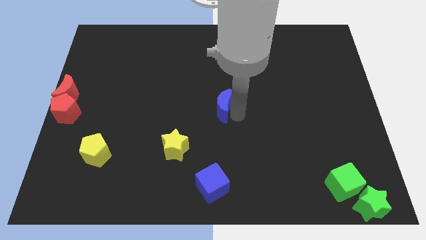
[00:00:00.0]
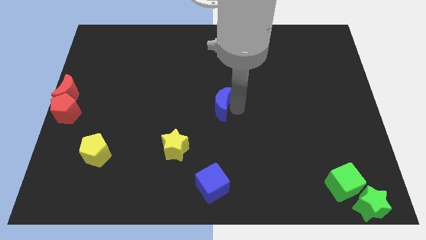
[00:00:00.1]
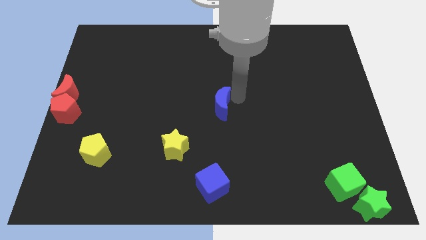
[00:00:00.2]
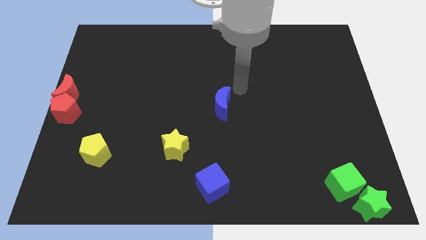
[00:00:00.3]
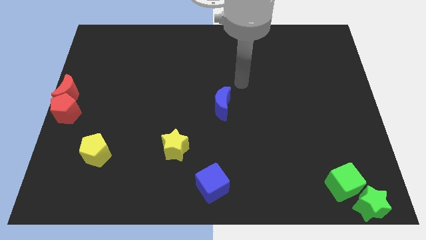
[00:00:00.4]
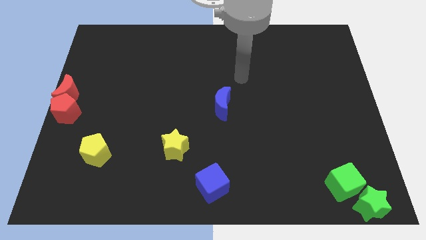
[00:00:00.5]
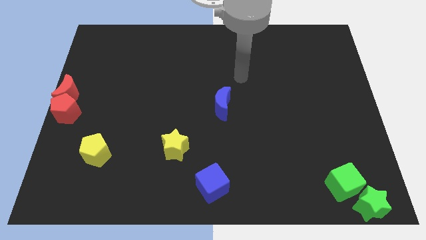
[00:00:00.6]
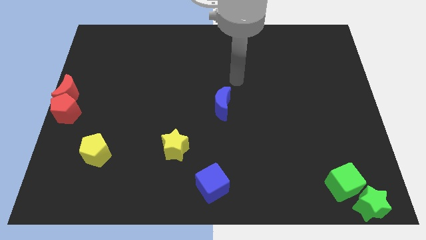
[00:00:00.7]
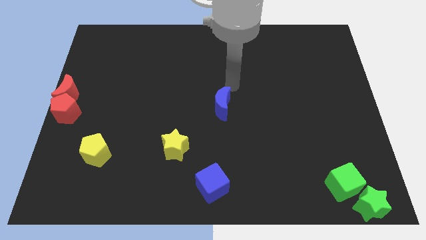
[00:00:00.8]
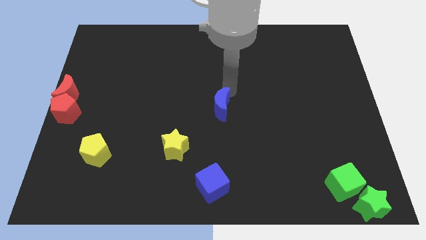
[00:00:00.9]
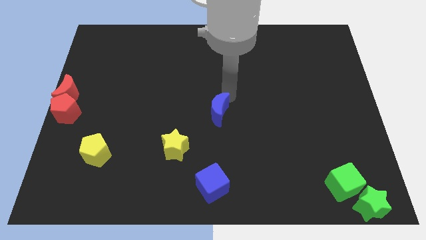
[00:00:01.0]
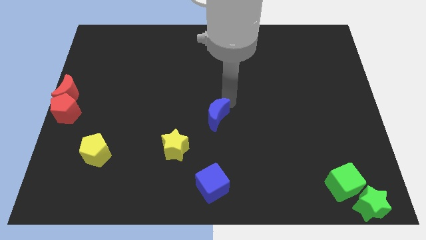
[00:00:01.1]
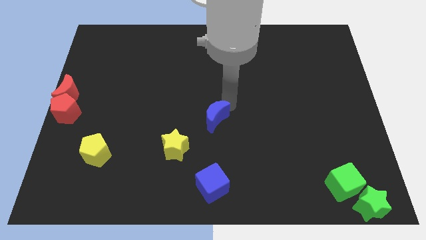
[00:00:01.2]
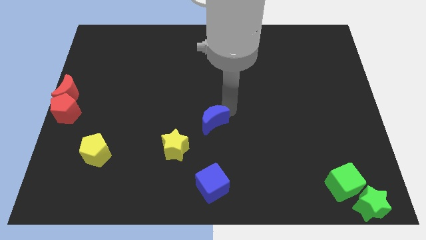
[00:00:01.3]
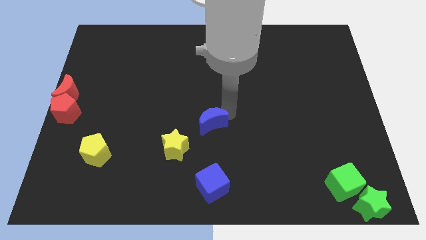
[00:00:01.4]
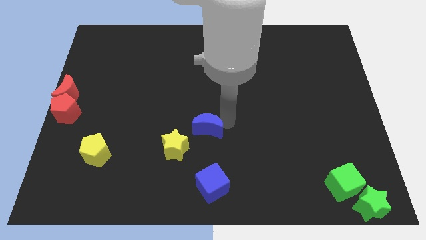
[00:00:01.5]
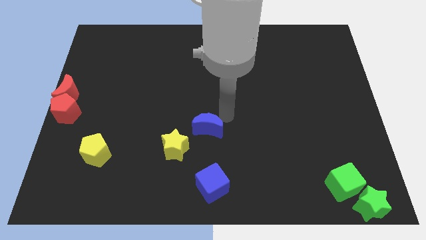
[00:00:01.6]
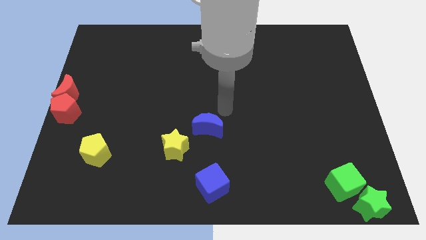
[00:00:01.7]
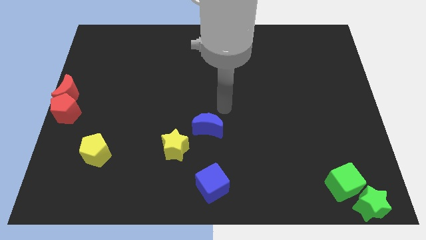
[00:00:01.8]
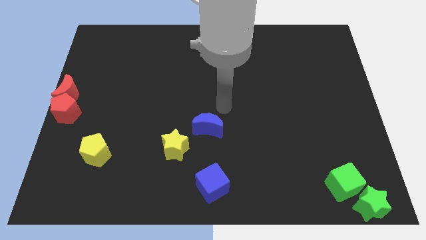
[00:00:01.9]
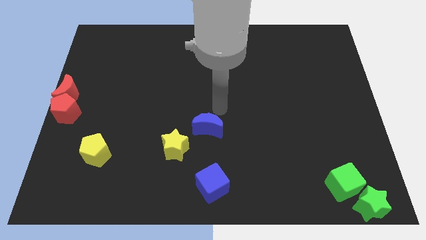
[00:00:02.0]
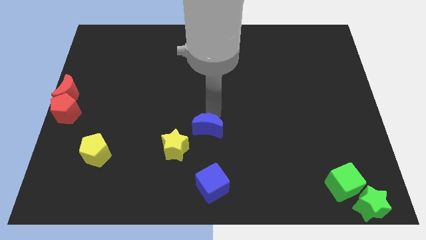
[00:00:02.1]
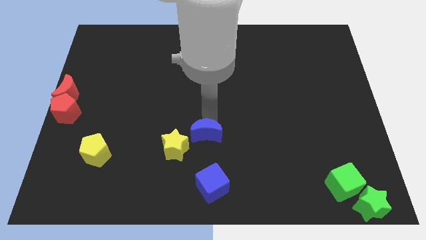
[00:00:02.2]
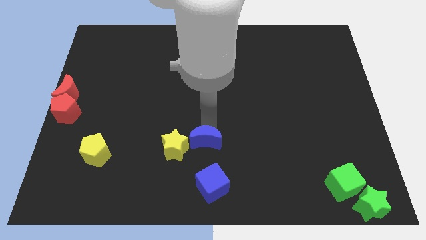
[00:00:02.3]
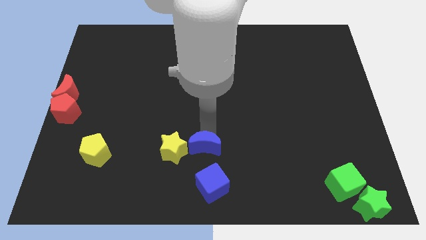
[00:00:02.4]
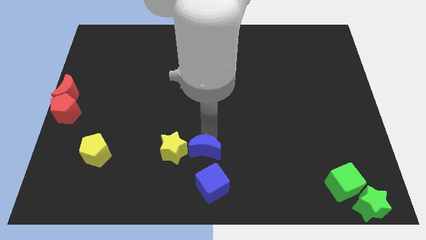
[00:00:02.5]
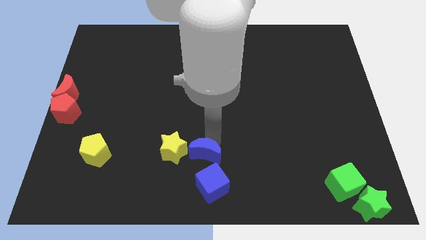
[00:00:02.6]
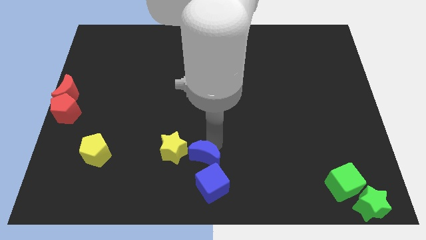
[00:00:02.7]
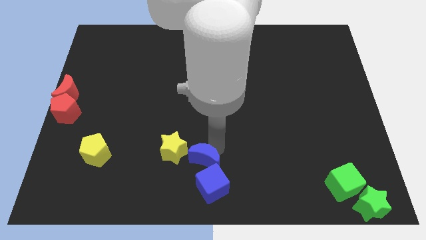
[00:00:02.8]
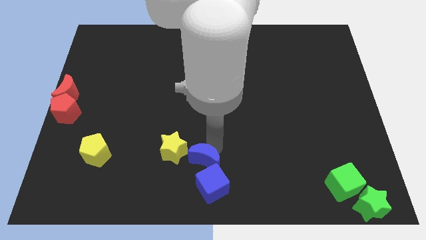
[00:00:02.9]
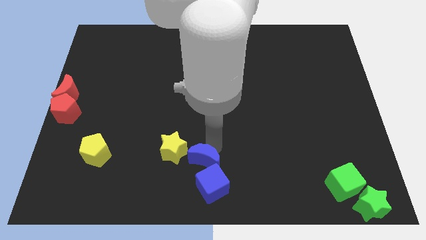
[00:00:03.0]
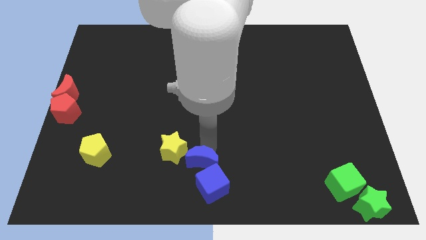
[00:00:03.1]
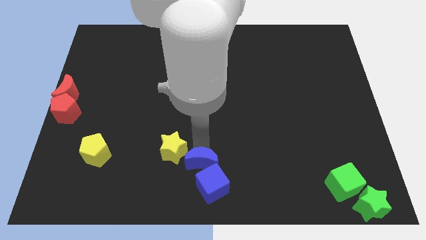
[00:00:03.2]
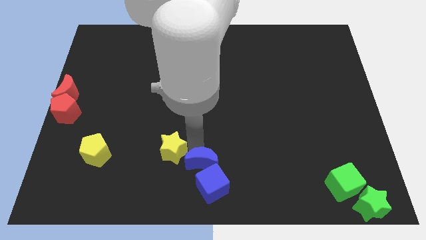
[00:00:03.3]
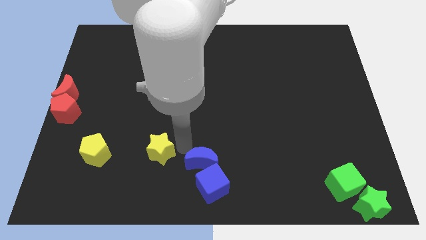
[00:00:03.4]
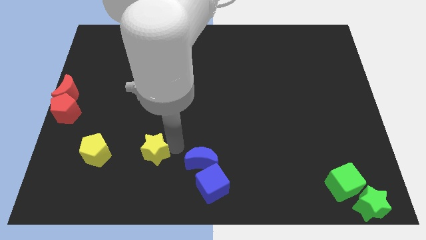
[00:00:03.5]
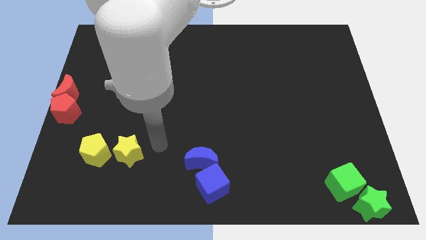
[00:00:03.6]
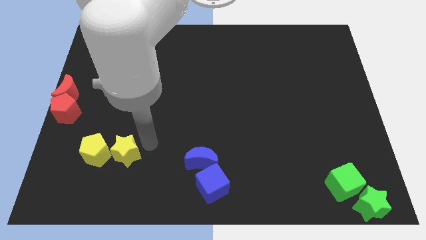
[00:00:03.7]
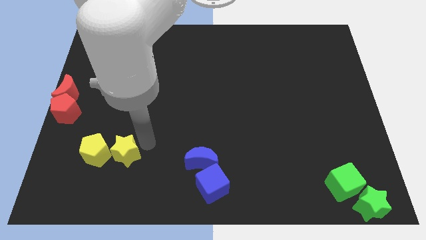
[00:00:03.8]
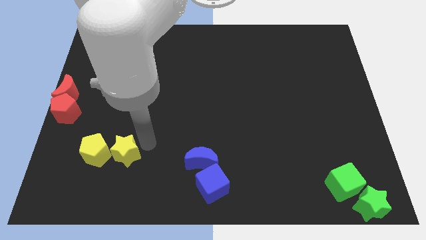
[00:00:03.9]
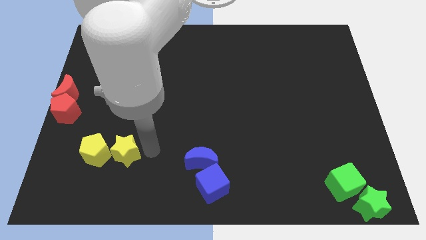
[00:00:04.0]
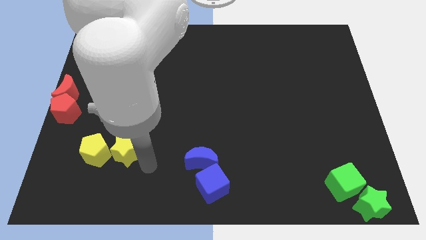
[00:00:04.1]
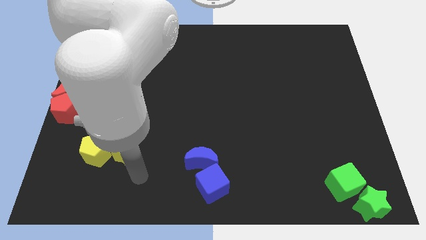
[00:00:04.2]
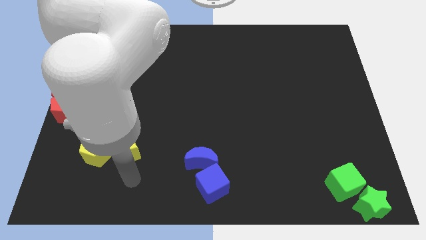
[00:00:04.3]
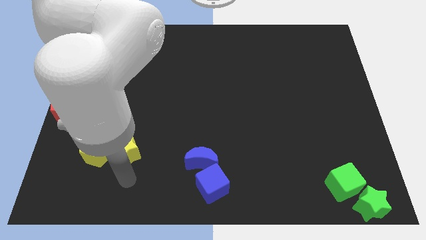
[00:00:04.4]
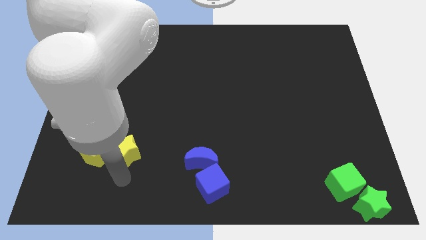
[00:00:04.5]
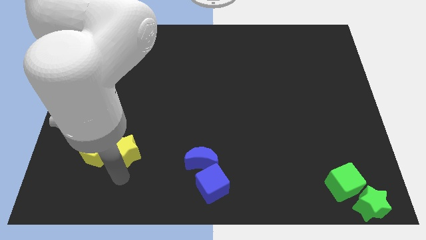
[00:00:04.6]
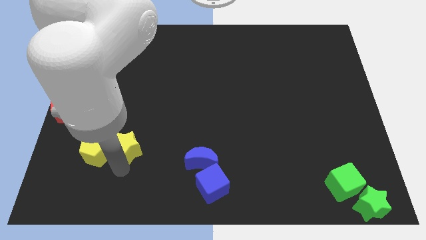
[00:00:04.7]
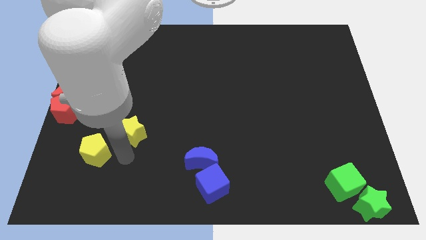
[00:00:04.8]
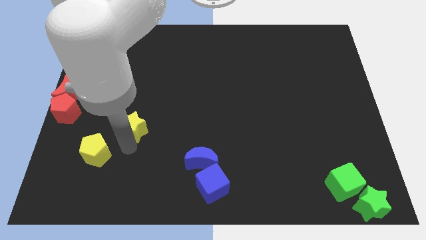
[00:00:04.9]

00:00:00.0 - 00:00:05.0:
move the blue moon above the blue cube

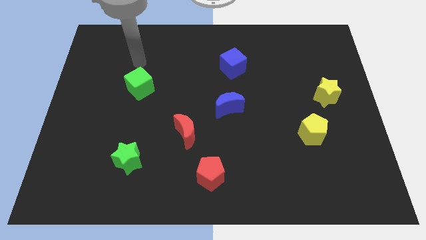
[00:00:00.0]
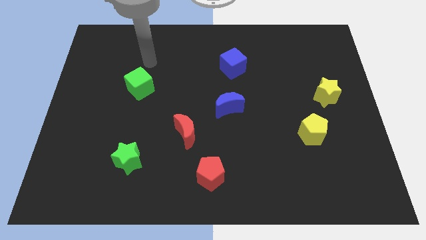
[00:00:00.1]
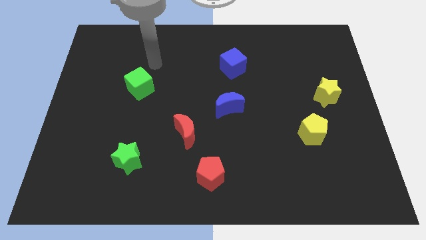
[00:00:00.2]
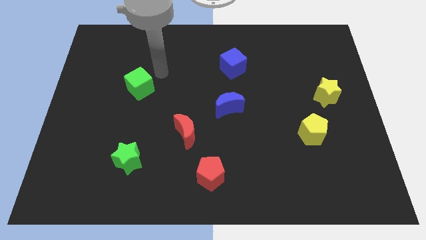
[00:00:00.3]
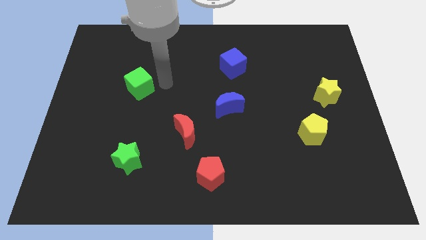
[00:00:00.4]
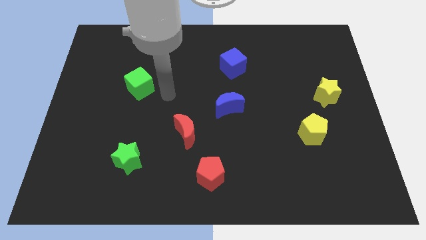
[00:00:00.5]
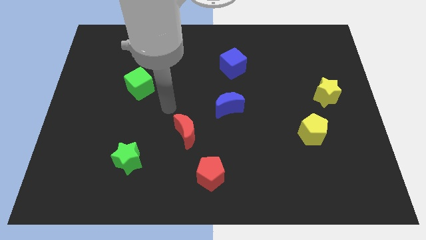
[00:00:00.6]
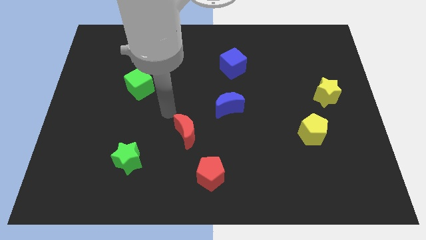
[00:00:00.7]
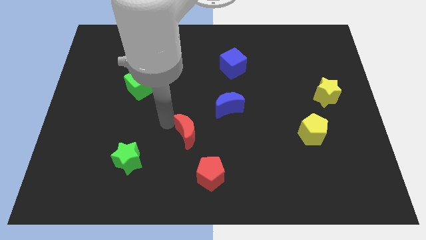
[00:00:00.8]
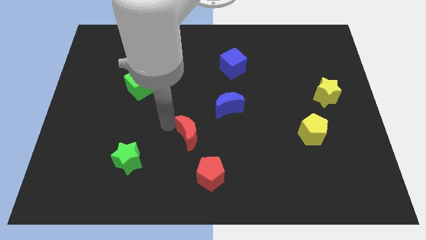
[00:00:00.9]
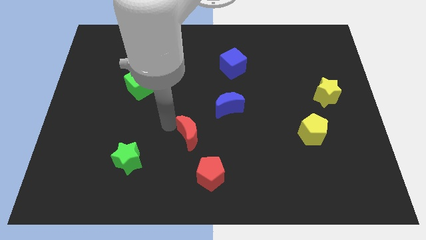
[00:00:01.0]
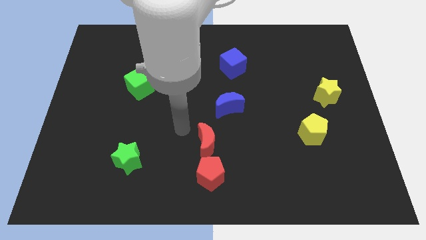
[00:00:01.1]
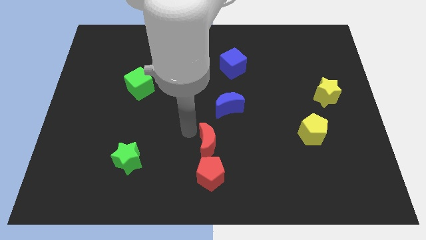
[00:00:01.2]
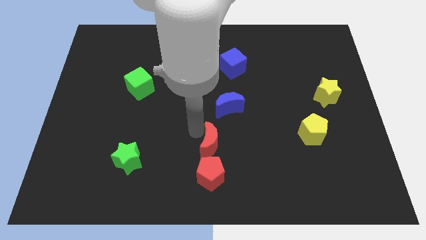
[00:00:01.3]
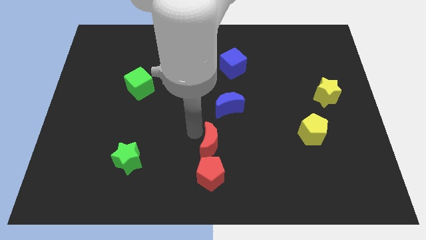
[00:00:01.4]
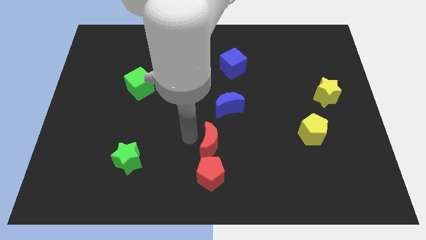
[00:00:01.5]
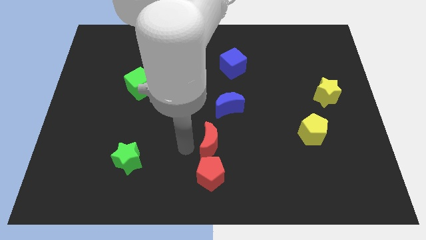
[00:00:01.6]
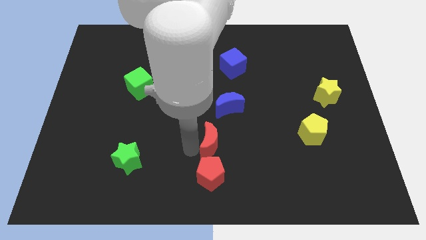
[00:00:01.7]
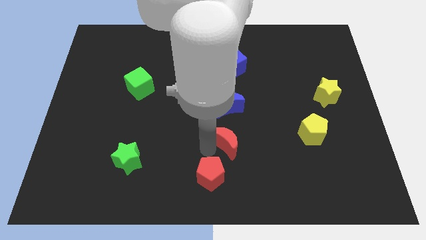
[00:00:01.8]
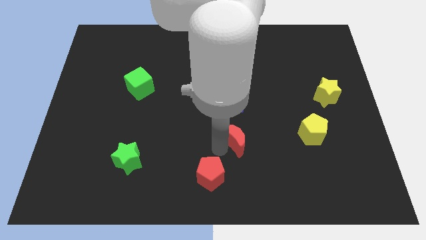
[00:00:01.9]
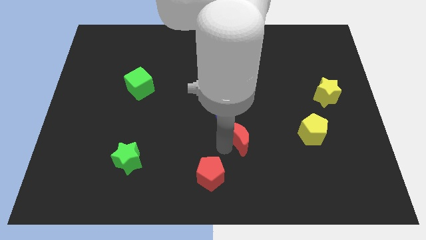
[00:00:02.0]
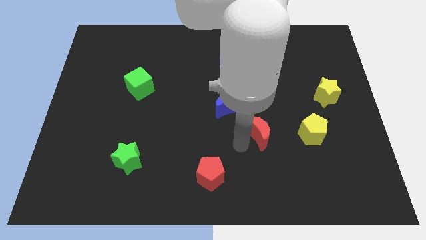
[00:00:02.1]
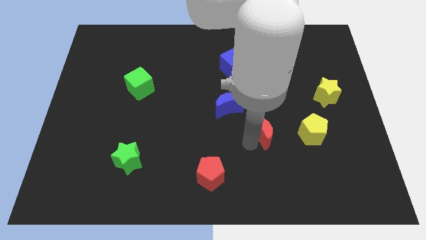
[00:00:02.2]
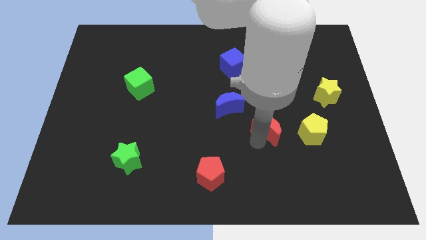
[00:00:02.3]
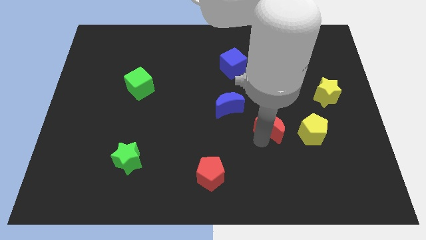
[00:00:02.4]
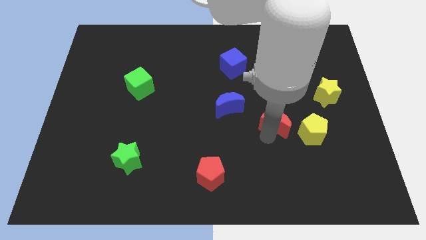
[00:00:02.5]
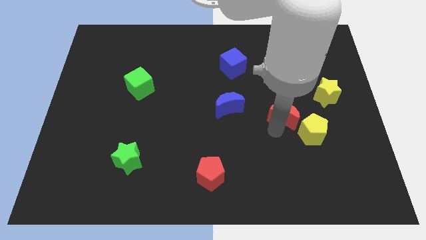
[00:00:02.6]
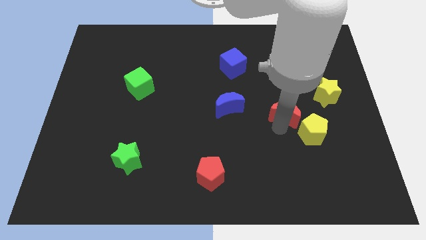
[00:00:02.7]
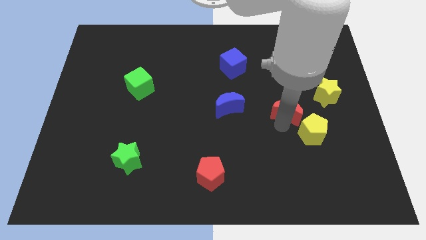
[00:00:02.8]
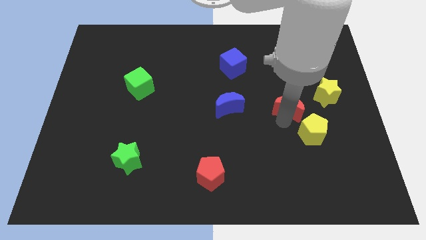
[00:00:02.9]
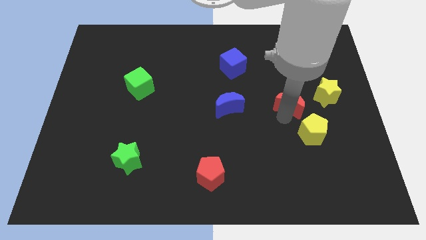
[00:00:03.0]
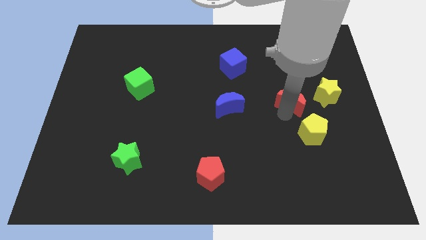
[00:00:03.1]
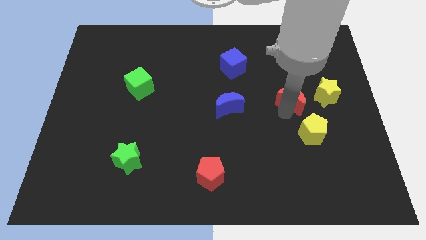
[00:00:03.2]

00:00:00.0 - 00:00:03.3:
place the red moon diagonally top left to the yellow pentagon

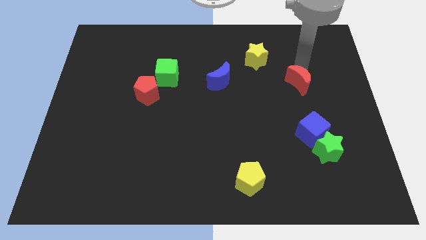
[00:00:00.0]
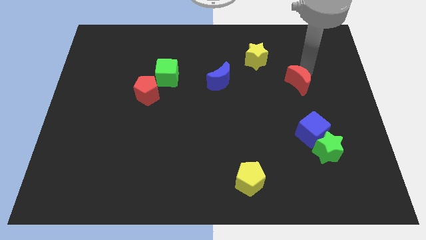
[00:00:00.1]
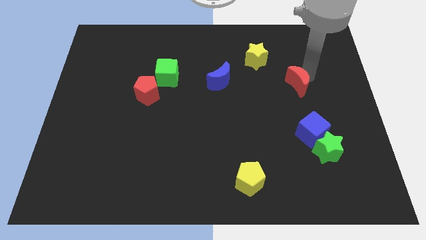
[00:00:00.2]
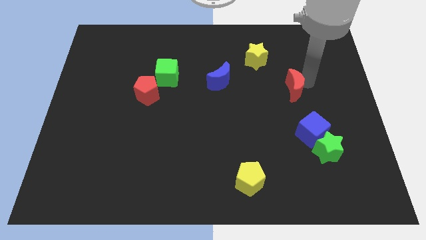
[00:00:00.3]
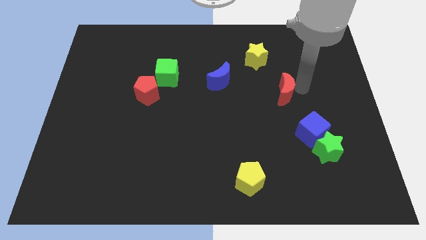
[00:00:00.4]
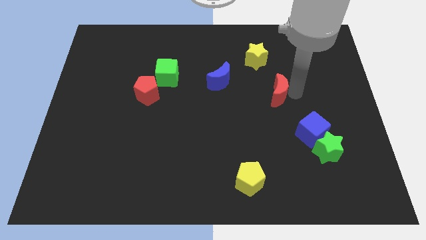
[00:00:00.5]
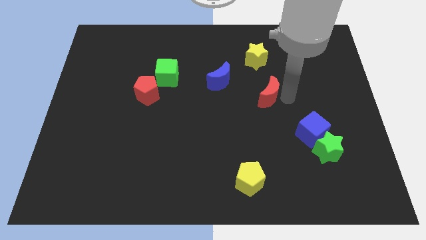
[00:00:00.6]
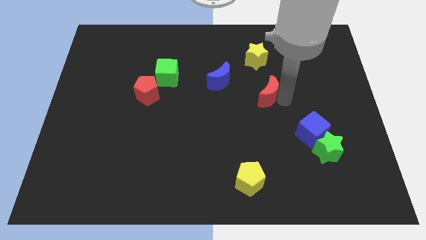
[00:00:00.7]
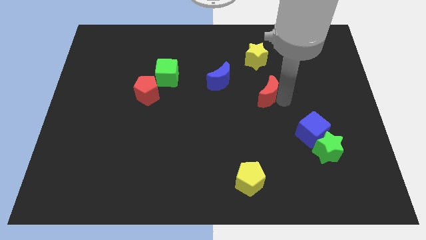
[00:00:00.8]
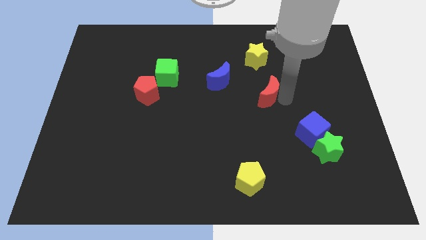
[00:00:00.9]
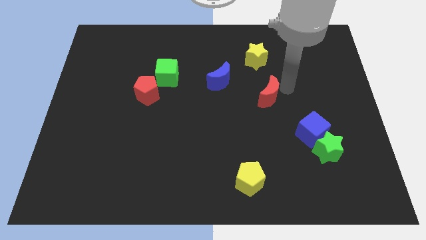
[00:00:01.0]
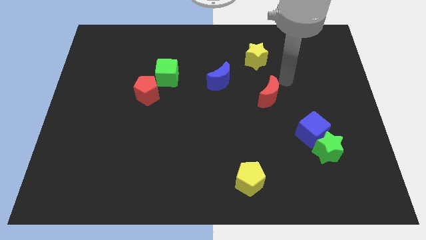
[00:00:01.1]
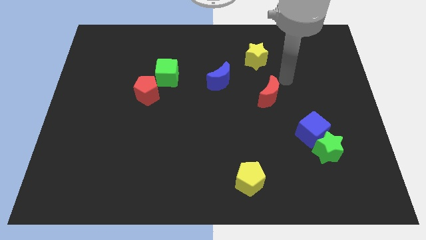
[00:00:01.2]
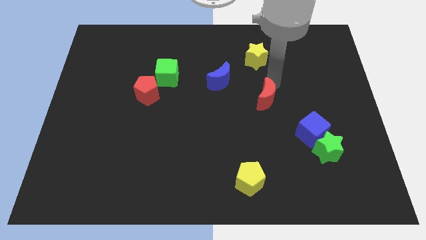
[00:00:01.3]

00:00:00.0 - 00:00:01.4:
push red moon to the bottom of yellow star
